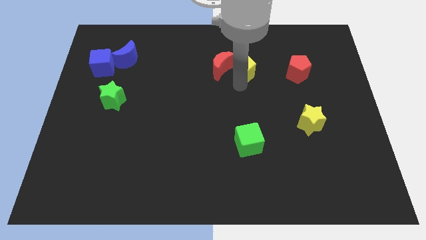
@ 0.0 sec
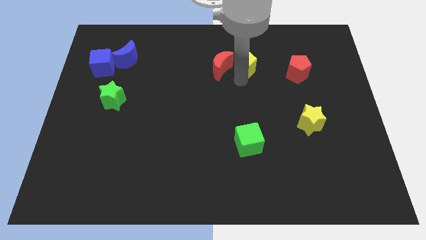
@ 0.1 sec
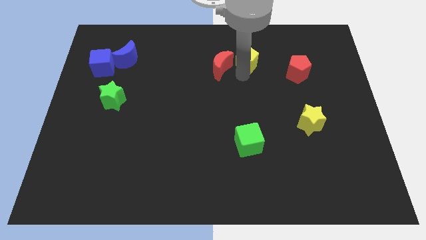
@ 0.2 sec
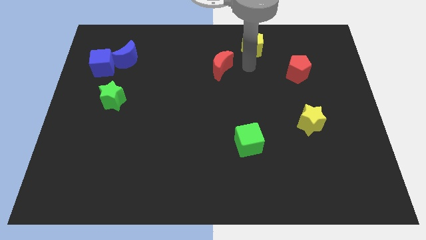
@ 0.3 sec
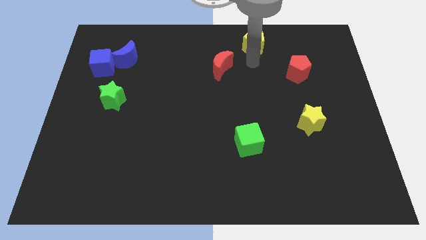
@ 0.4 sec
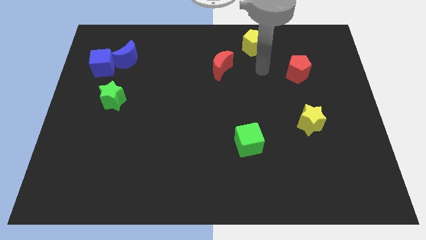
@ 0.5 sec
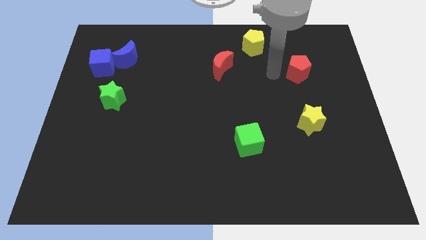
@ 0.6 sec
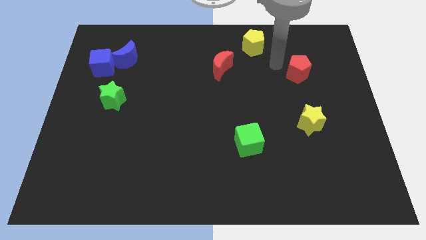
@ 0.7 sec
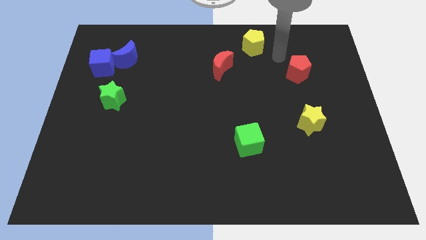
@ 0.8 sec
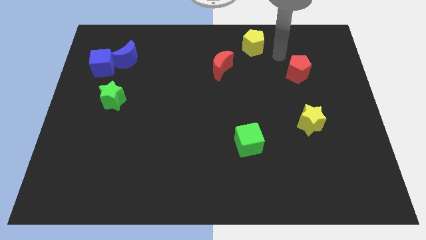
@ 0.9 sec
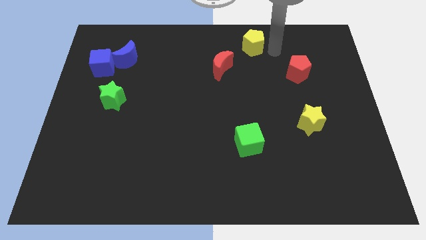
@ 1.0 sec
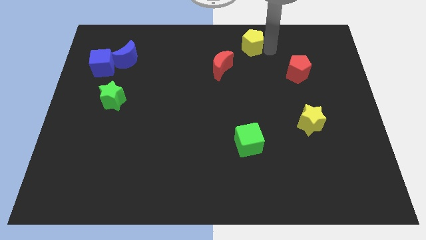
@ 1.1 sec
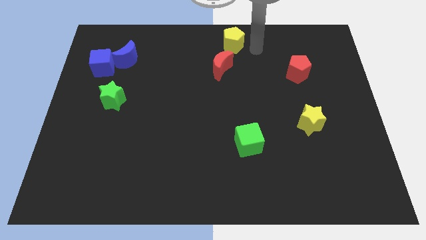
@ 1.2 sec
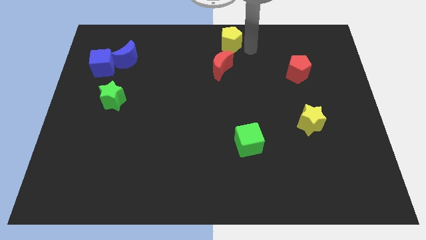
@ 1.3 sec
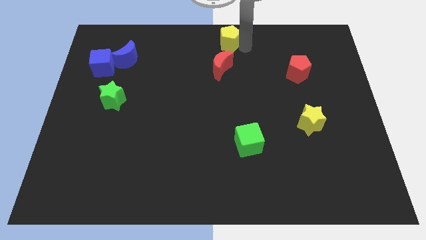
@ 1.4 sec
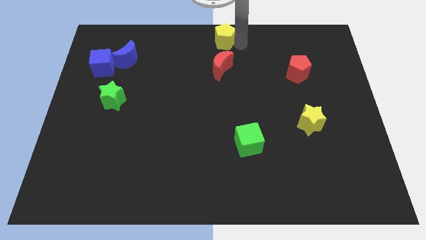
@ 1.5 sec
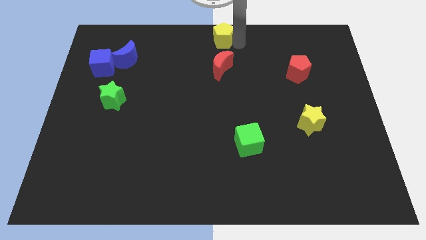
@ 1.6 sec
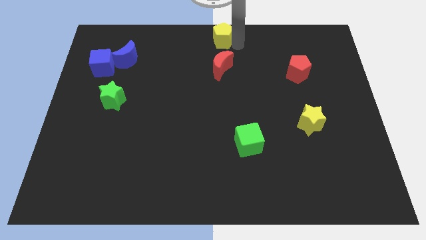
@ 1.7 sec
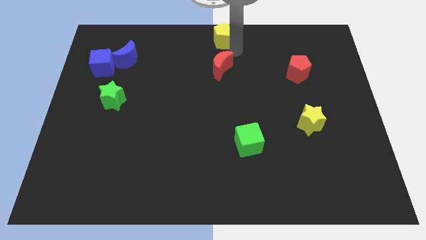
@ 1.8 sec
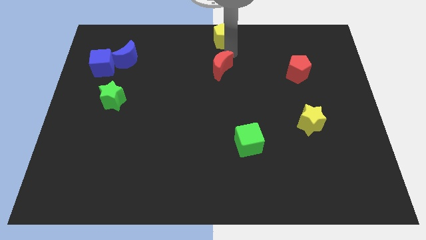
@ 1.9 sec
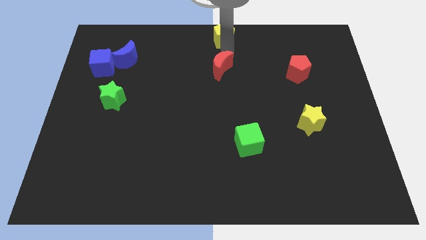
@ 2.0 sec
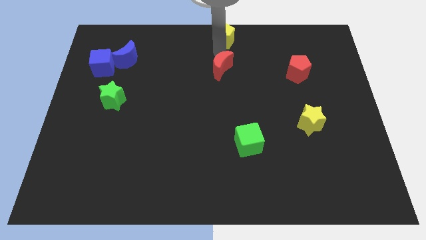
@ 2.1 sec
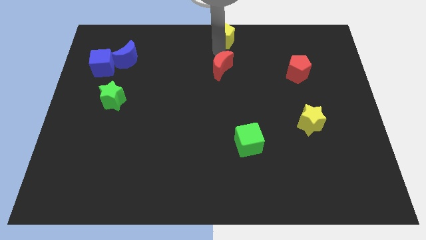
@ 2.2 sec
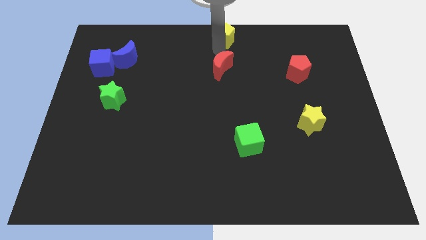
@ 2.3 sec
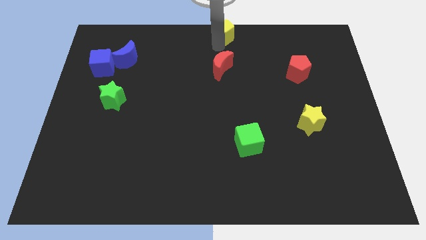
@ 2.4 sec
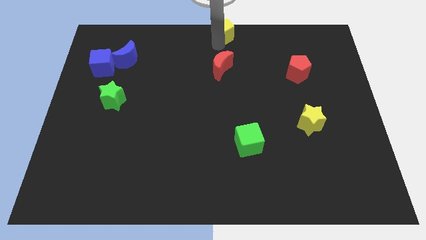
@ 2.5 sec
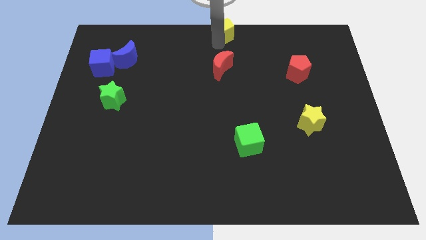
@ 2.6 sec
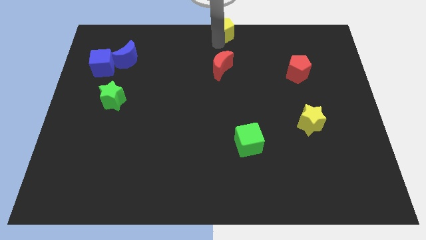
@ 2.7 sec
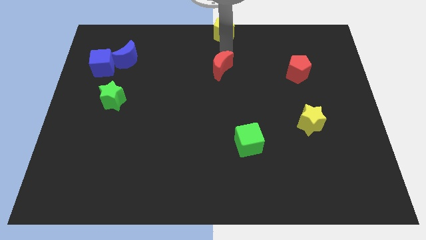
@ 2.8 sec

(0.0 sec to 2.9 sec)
place yellow pentagon above red red crescent

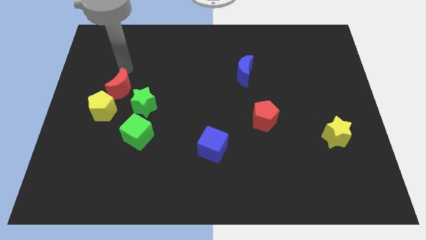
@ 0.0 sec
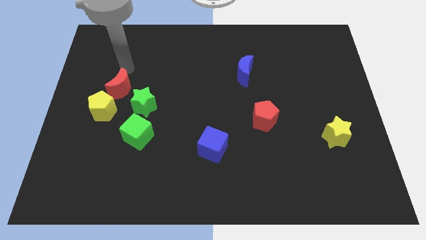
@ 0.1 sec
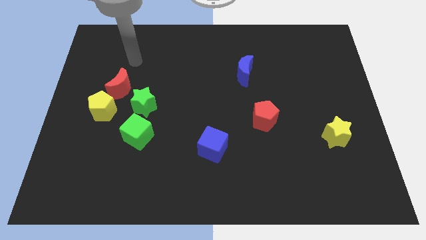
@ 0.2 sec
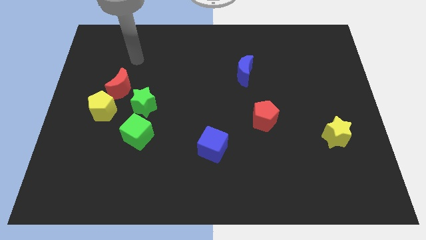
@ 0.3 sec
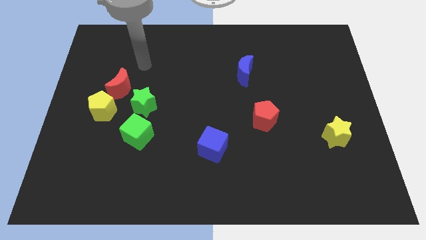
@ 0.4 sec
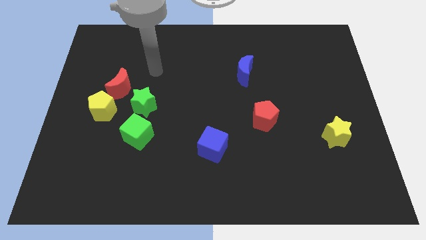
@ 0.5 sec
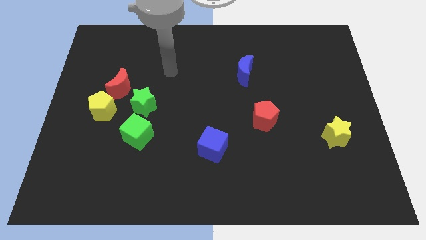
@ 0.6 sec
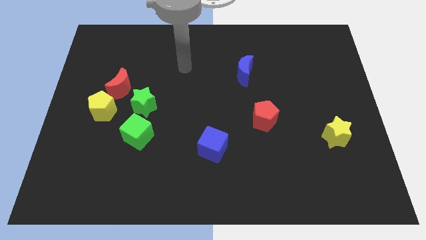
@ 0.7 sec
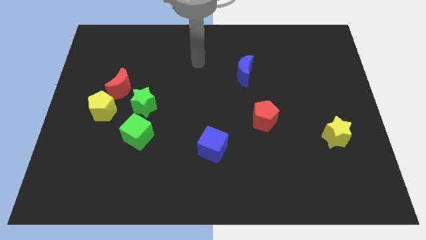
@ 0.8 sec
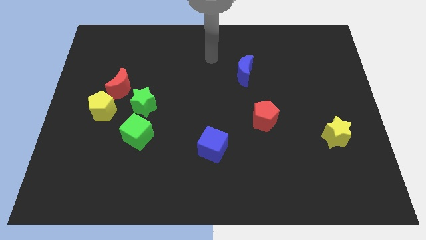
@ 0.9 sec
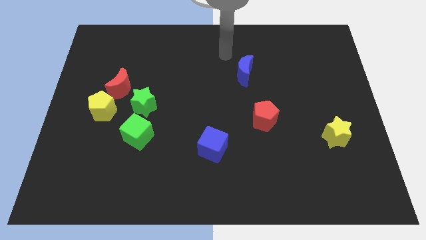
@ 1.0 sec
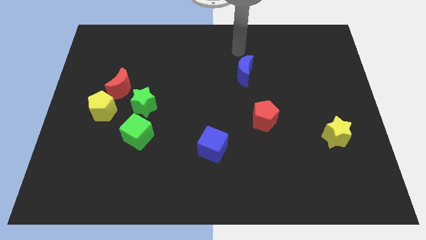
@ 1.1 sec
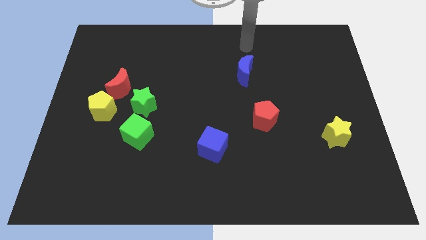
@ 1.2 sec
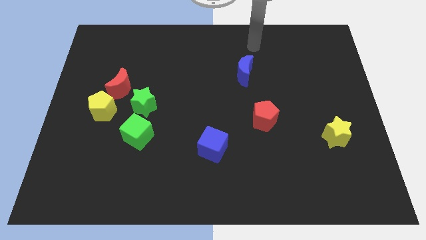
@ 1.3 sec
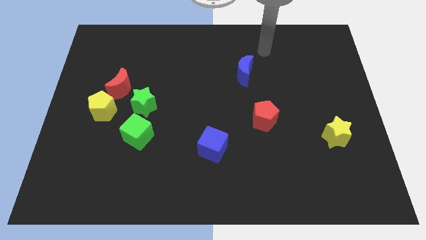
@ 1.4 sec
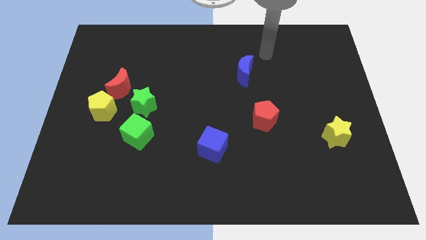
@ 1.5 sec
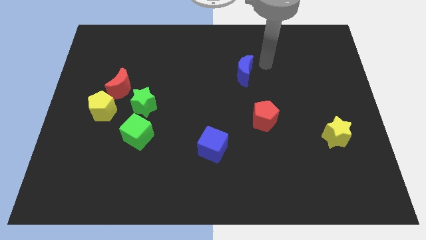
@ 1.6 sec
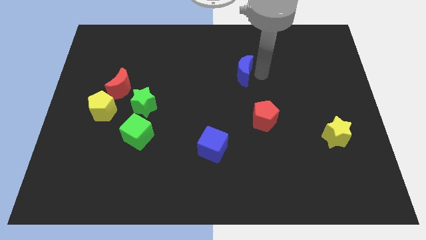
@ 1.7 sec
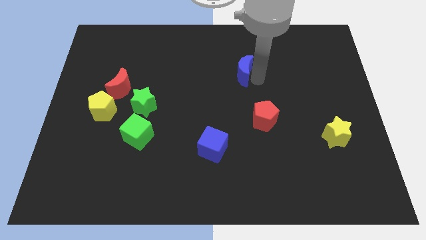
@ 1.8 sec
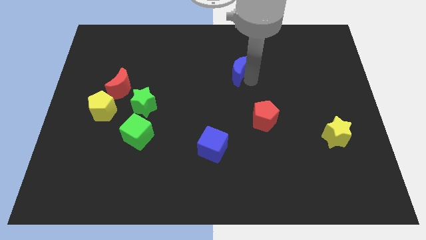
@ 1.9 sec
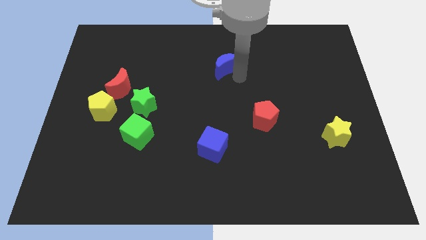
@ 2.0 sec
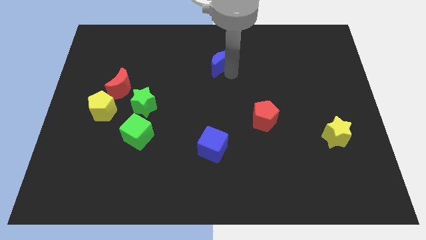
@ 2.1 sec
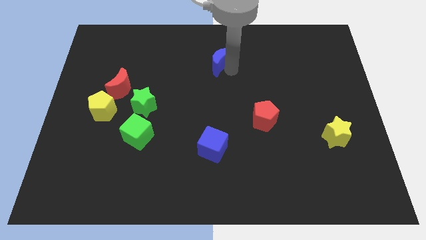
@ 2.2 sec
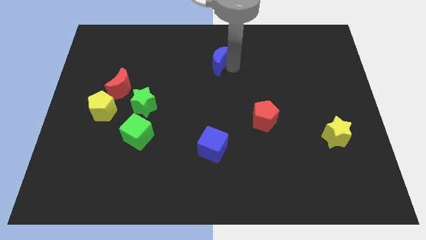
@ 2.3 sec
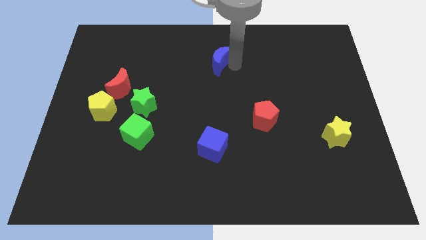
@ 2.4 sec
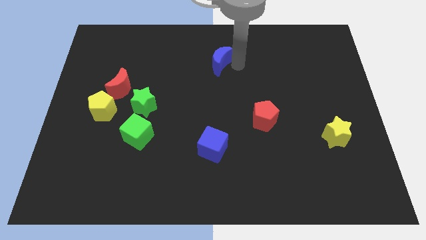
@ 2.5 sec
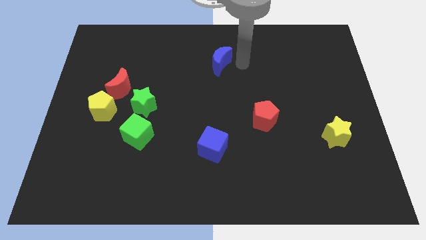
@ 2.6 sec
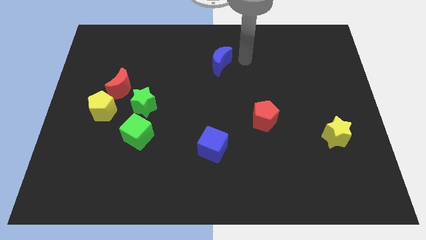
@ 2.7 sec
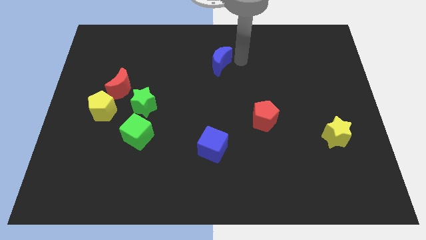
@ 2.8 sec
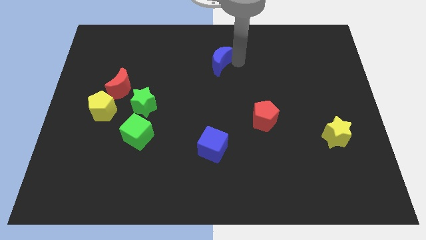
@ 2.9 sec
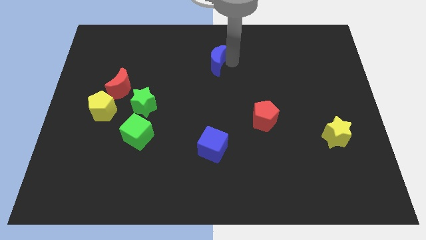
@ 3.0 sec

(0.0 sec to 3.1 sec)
move blue moon above the blue cube vertically

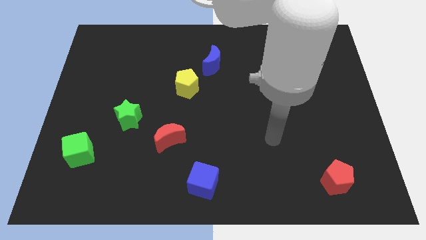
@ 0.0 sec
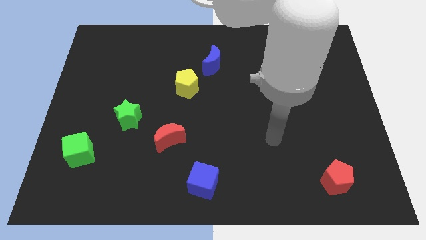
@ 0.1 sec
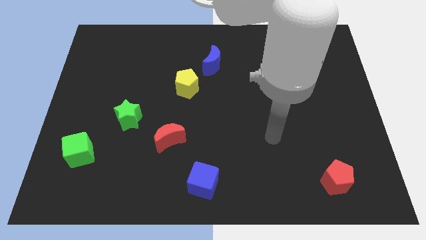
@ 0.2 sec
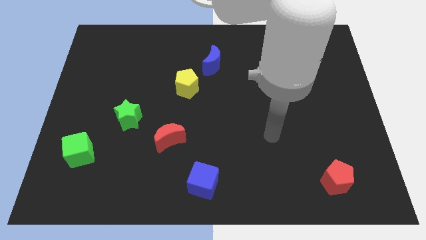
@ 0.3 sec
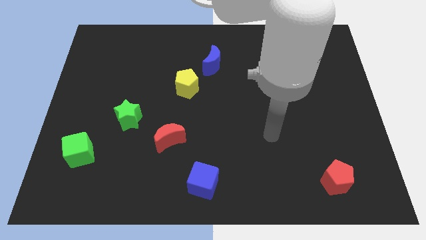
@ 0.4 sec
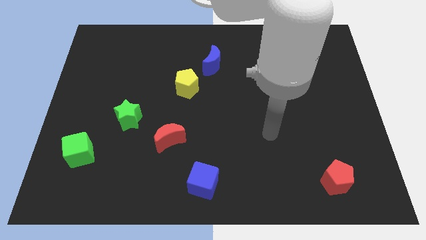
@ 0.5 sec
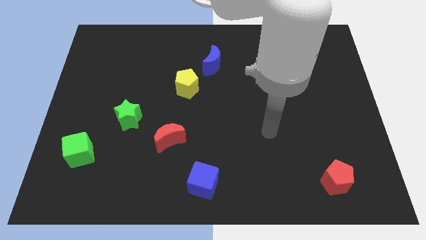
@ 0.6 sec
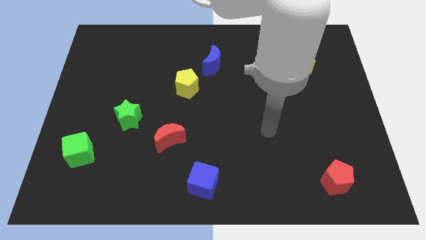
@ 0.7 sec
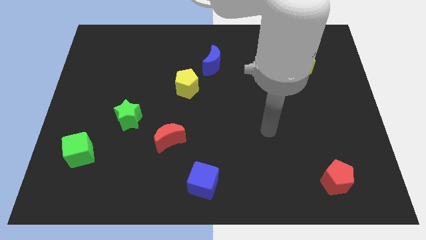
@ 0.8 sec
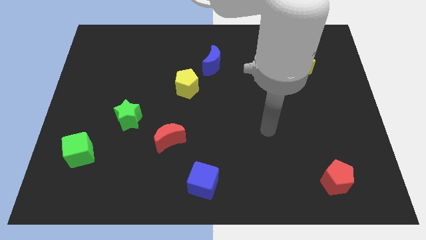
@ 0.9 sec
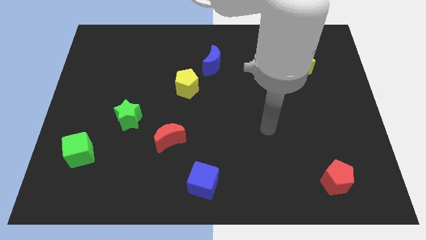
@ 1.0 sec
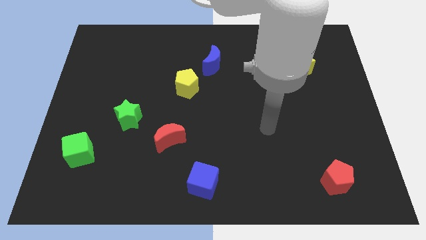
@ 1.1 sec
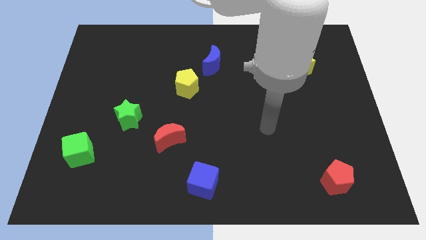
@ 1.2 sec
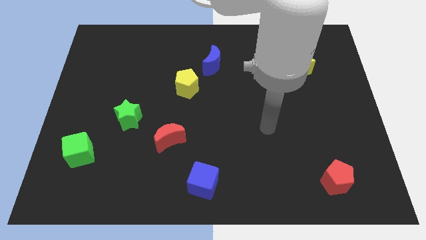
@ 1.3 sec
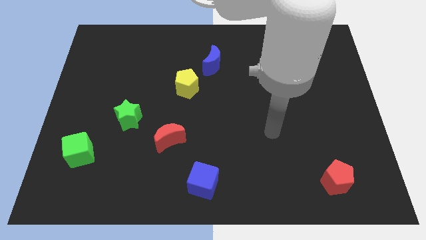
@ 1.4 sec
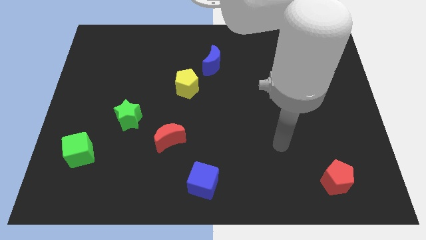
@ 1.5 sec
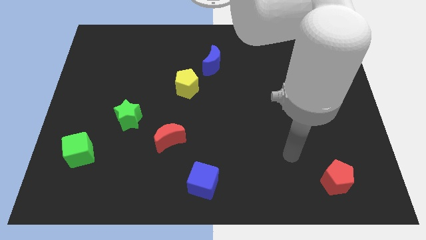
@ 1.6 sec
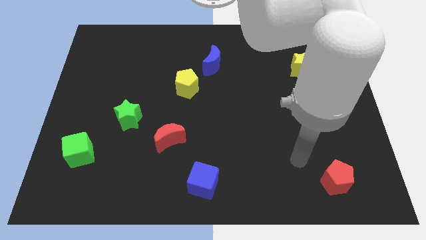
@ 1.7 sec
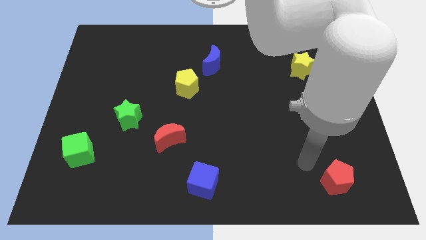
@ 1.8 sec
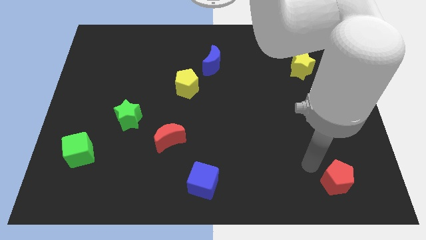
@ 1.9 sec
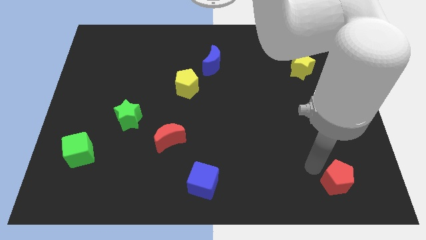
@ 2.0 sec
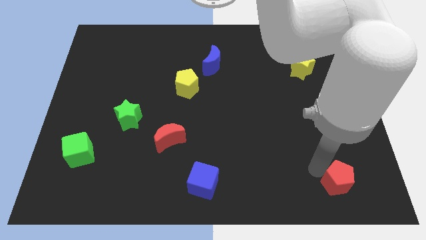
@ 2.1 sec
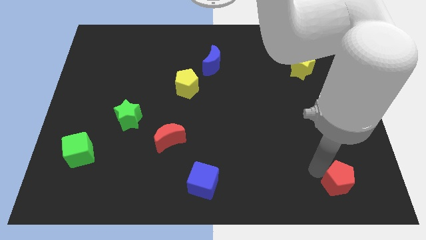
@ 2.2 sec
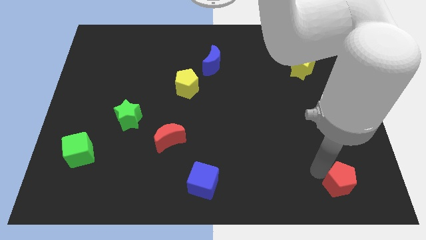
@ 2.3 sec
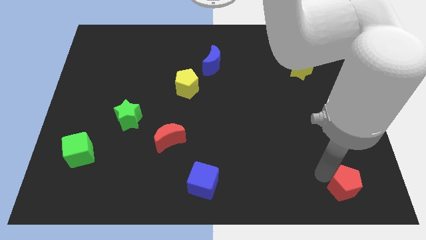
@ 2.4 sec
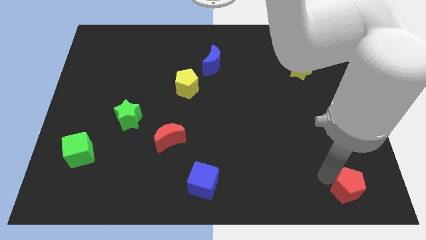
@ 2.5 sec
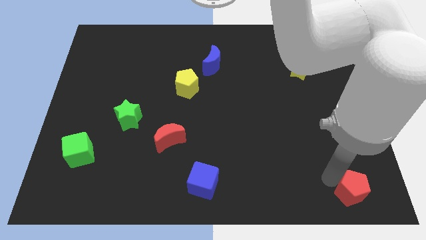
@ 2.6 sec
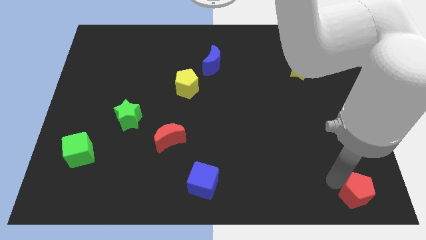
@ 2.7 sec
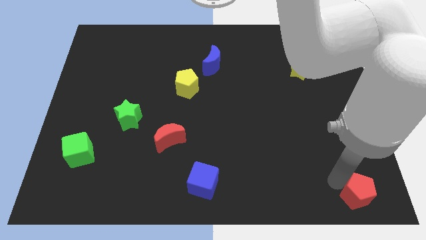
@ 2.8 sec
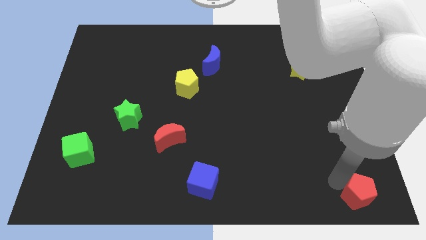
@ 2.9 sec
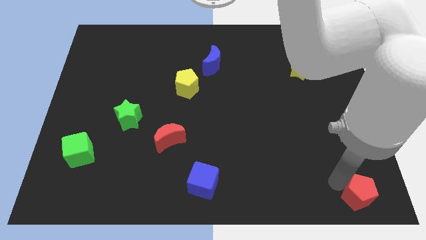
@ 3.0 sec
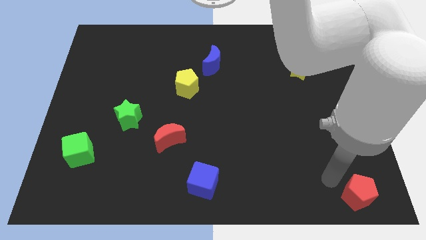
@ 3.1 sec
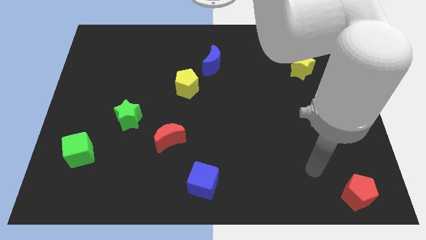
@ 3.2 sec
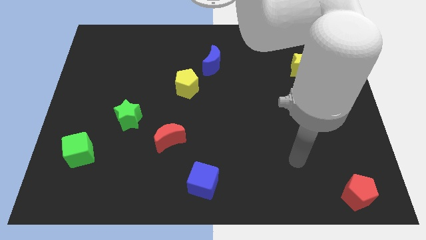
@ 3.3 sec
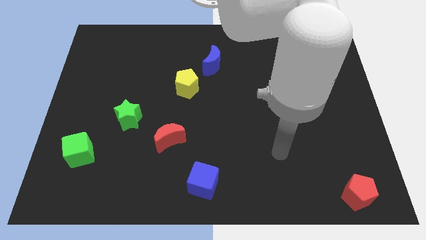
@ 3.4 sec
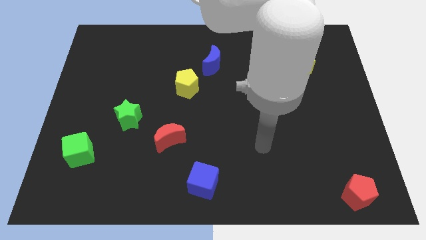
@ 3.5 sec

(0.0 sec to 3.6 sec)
push the red pentagon to the bottom right corner of the board
